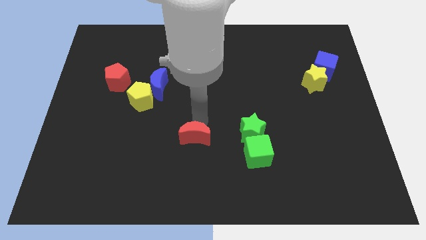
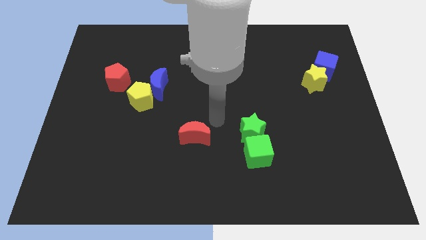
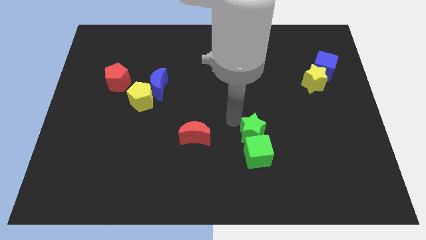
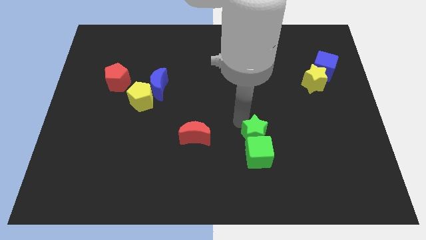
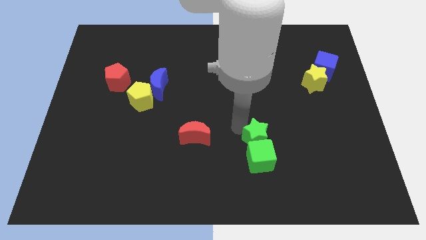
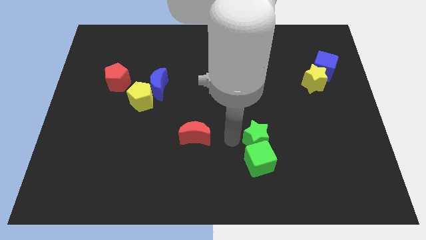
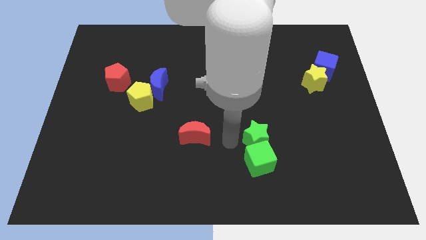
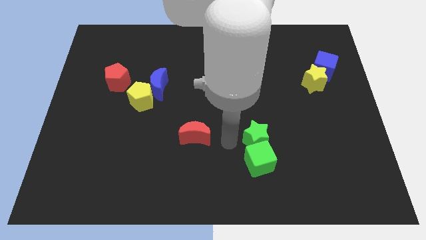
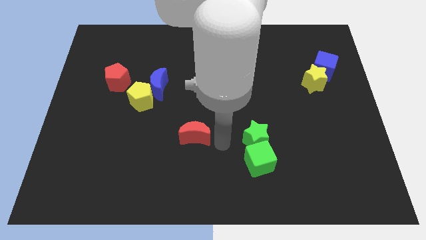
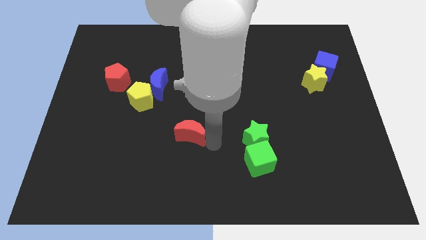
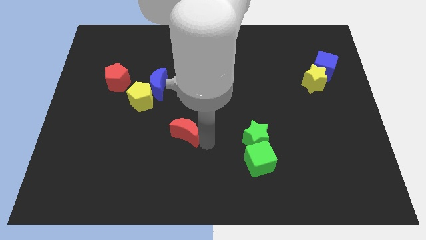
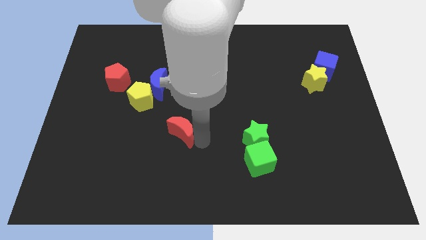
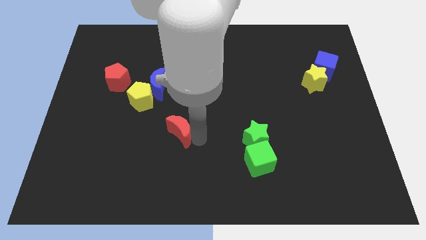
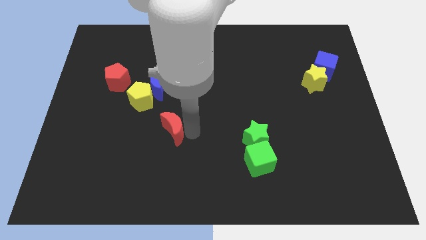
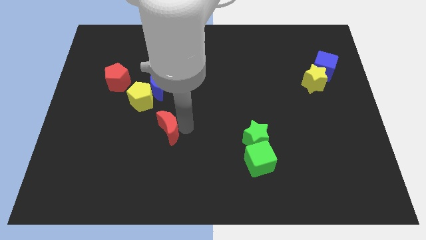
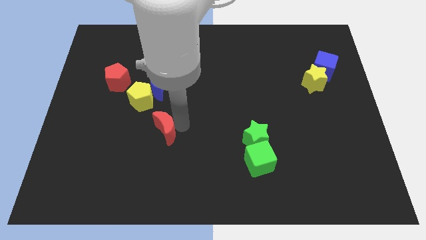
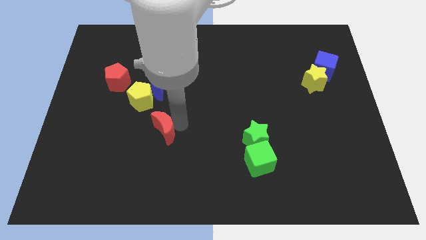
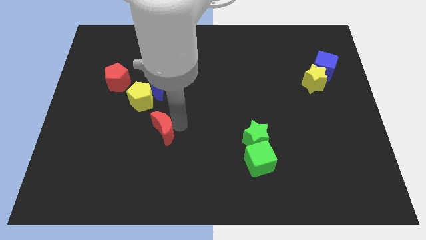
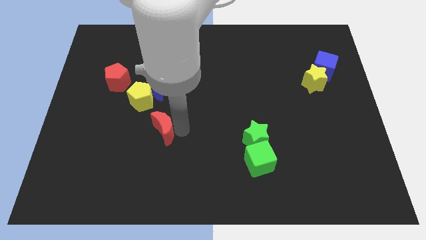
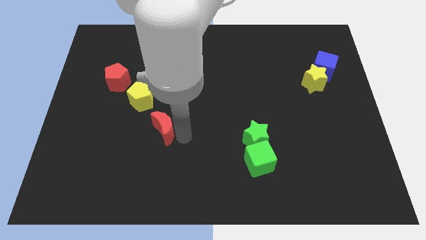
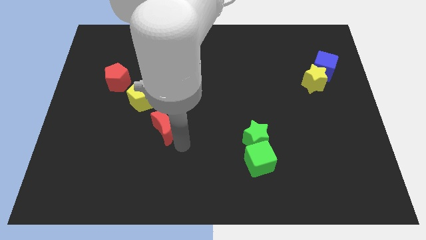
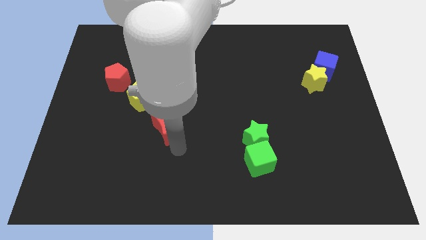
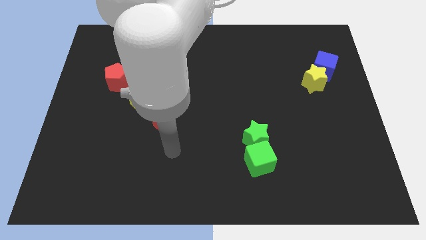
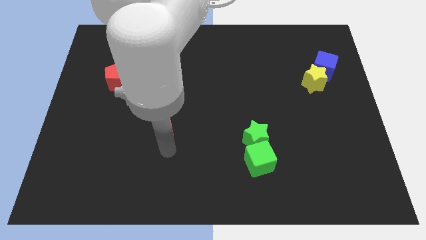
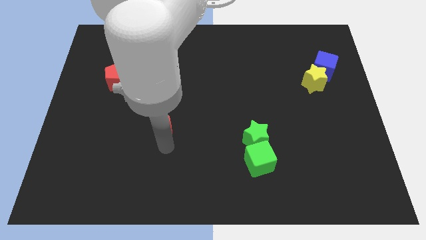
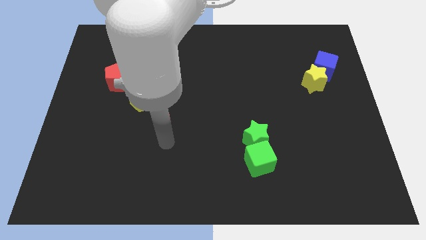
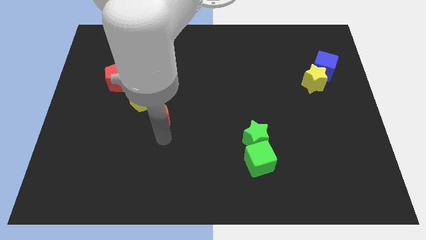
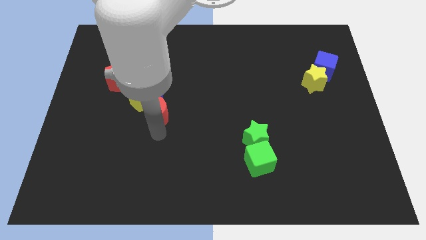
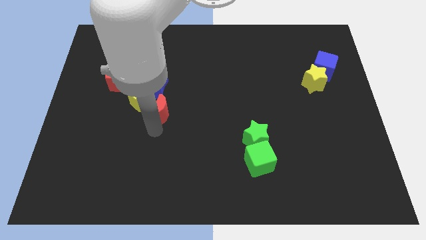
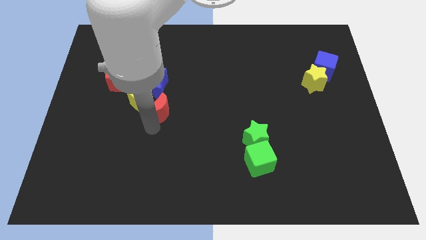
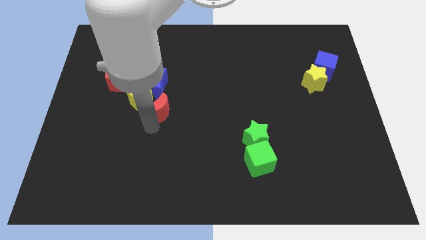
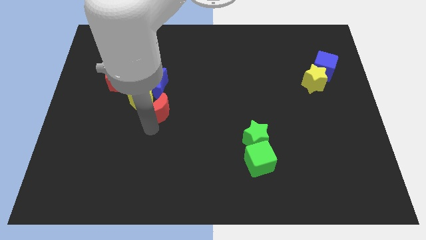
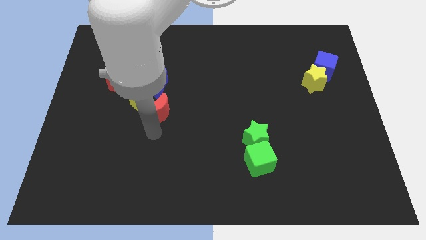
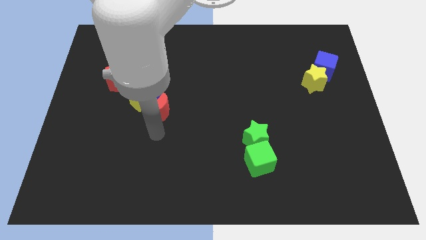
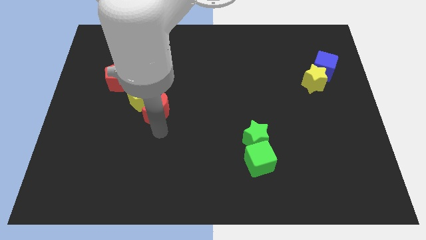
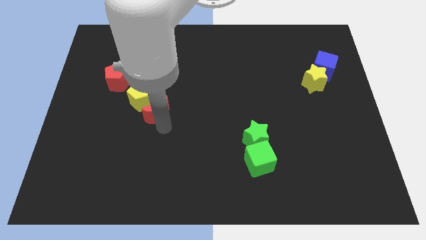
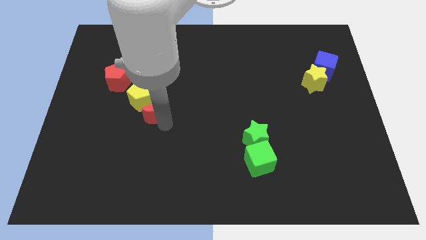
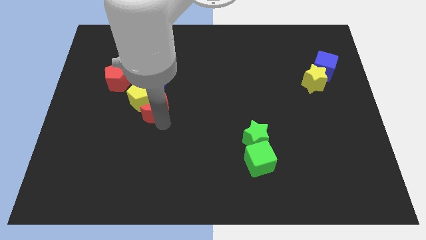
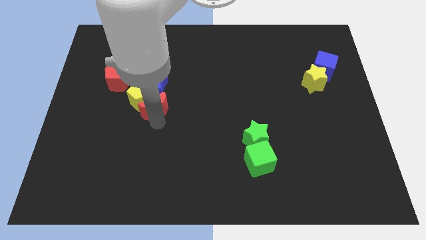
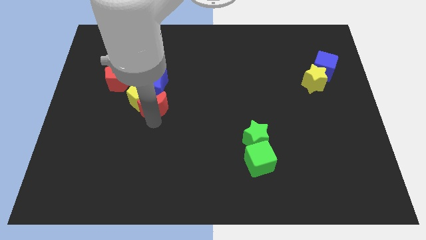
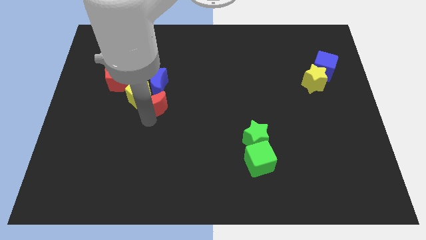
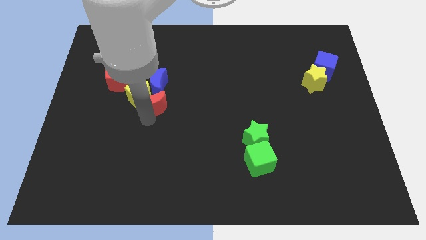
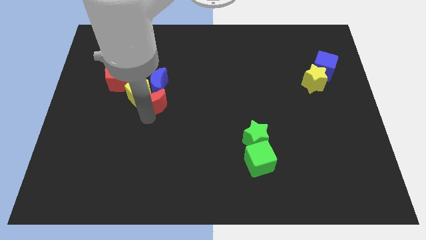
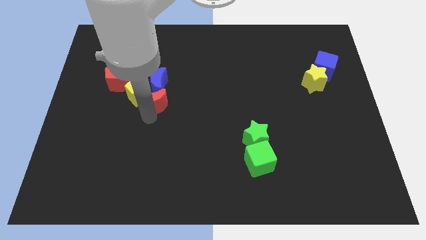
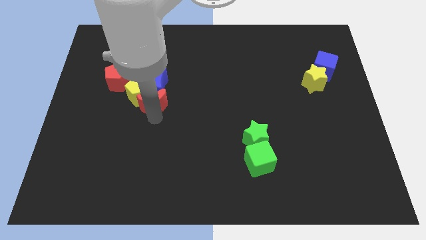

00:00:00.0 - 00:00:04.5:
move the red moon close to the pentagon

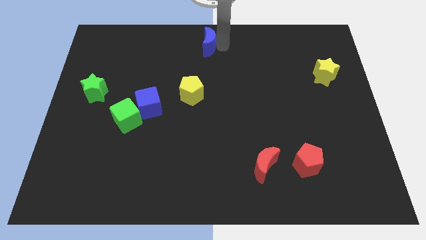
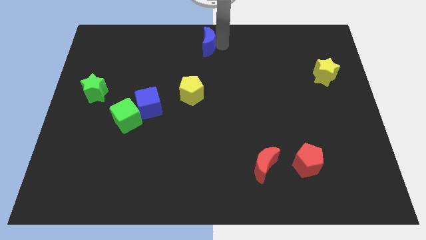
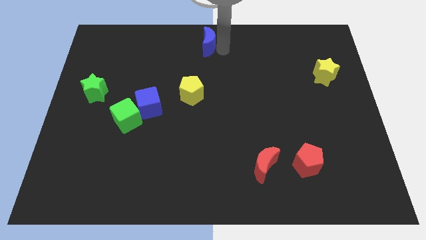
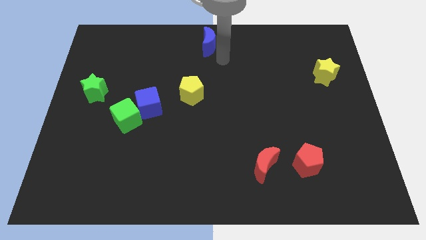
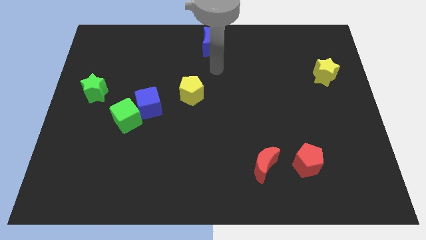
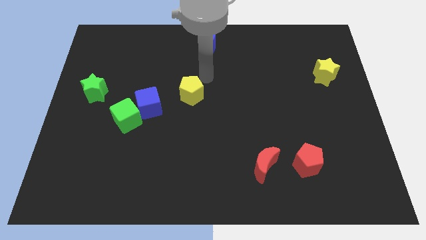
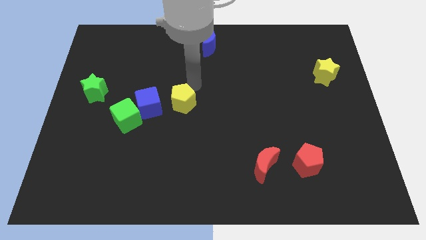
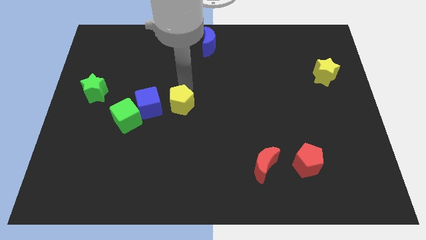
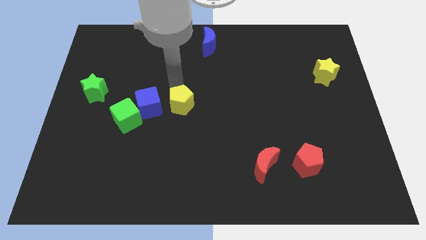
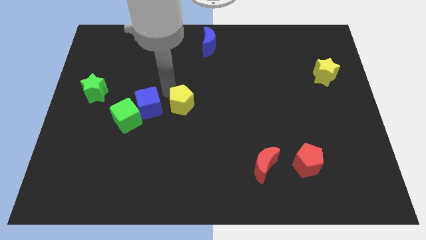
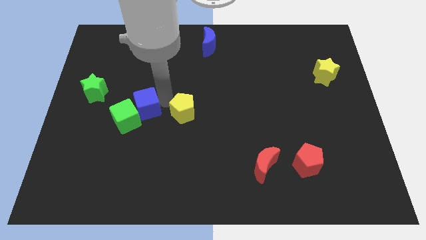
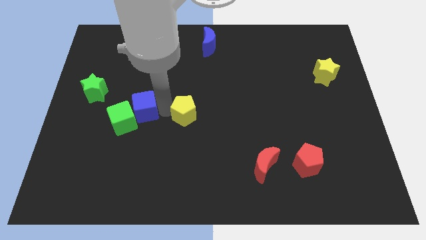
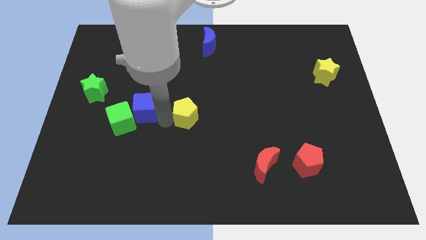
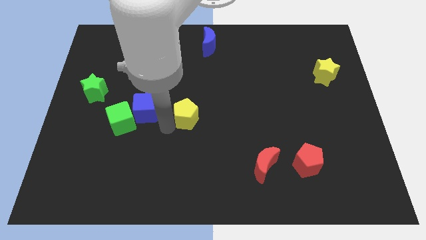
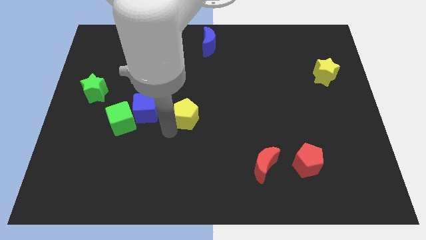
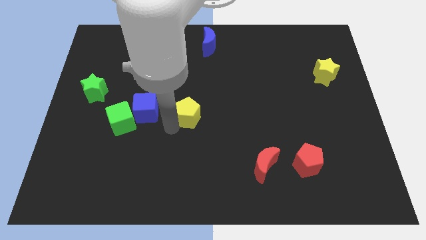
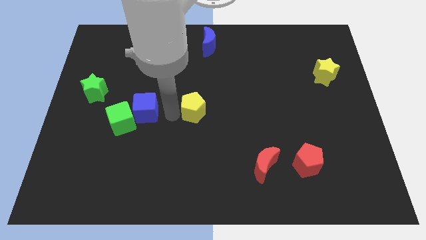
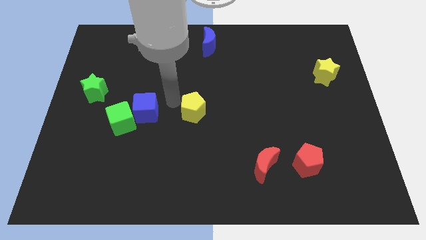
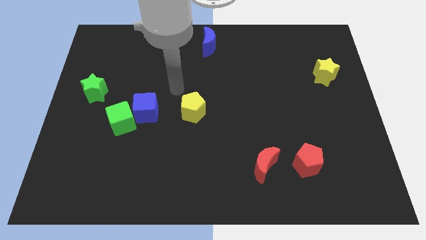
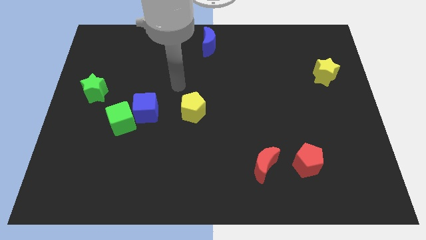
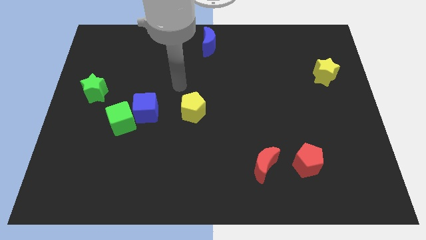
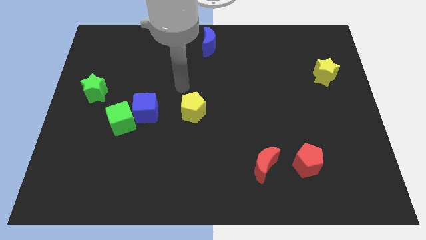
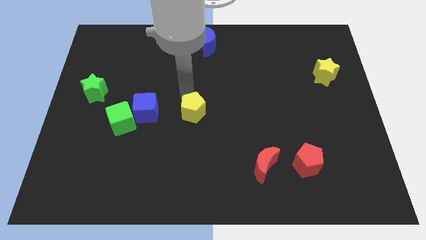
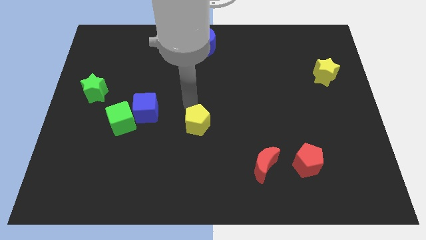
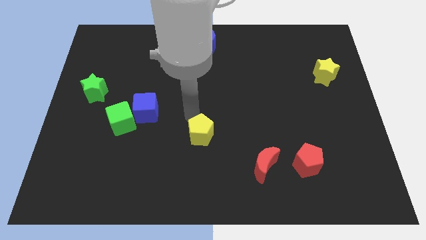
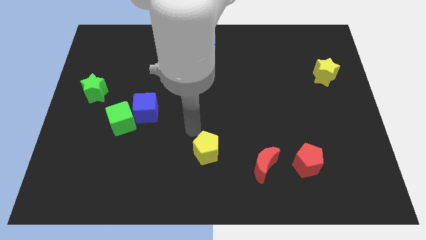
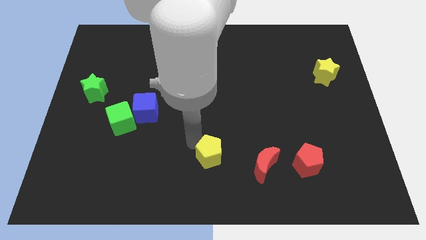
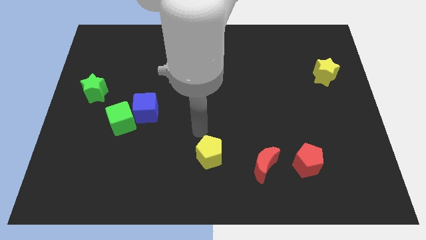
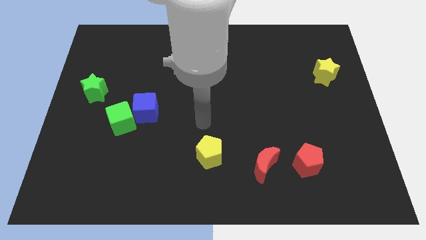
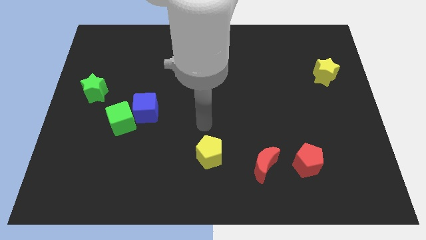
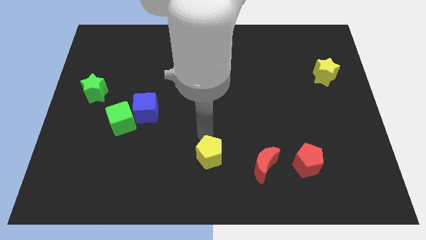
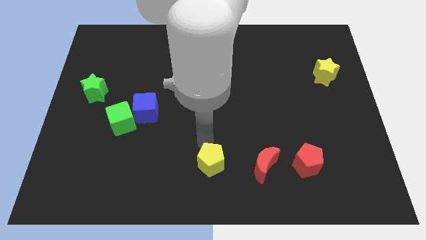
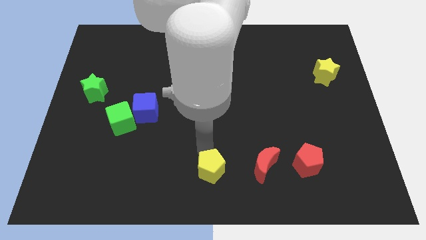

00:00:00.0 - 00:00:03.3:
place yellow pentagon to the left of the red moon

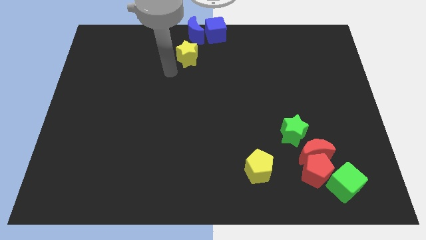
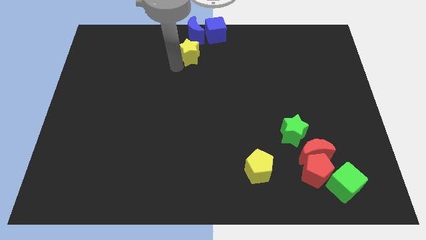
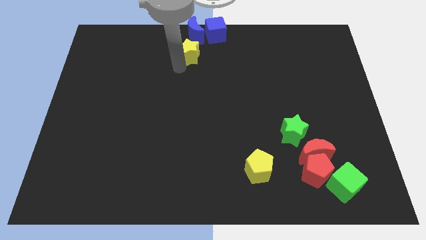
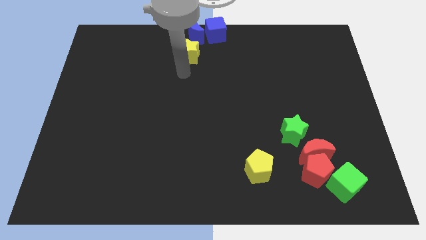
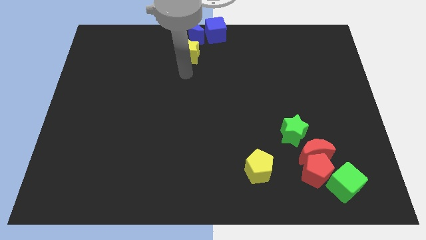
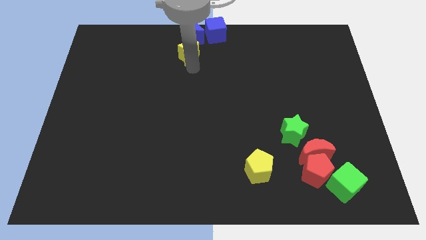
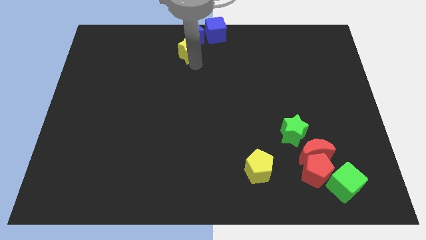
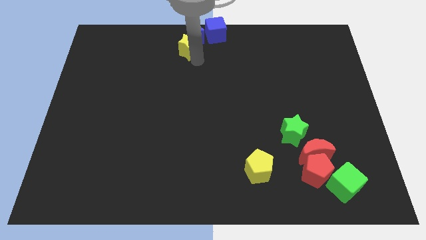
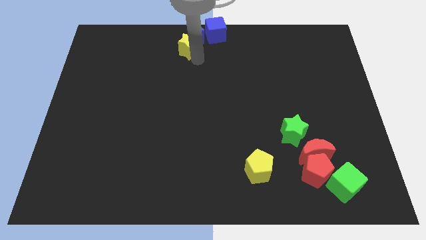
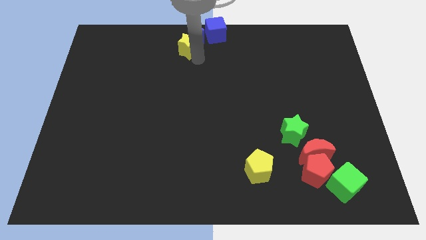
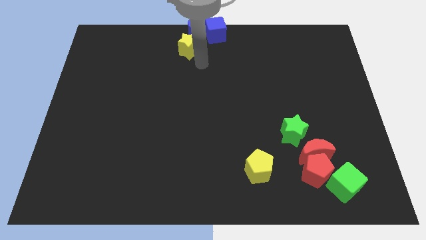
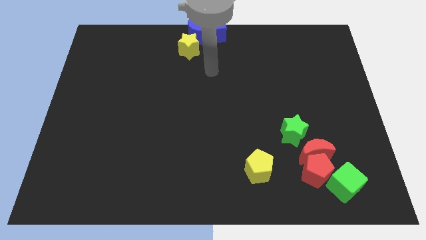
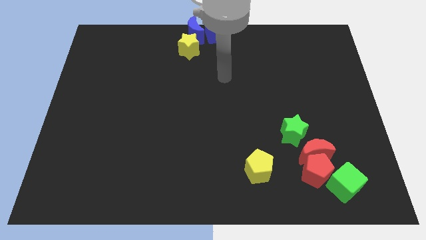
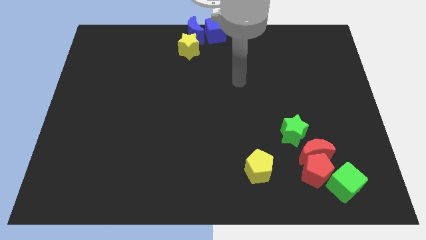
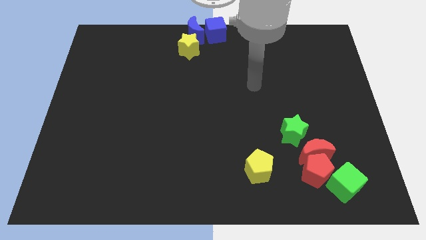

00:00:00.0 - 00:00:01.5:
place the yellow star below to the blue crescent
